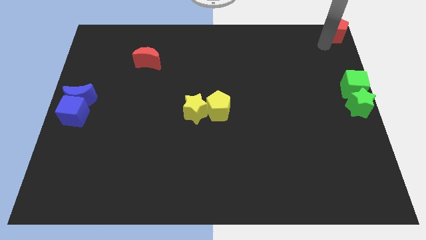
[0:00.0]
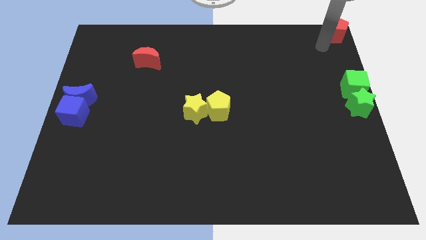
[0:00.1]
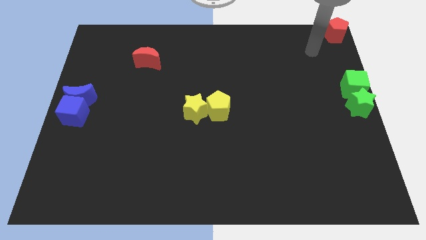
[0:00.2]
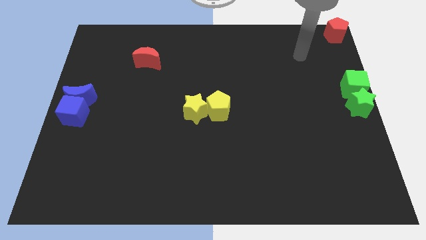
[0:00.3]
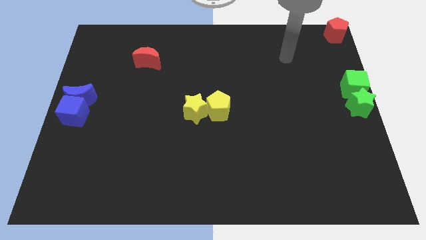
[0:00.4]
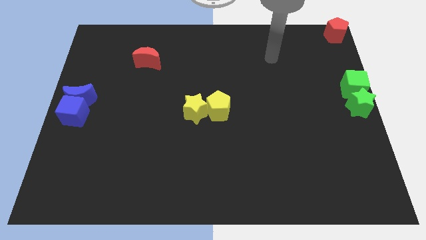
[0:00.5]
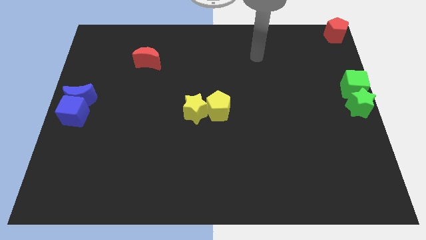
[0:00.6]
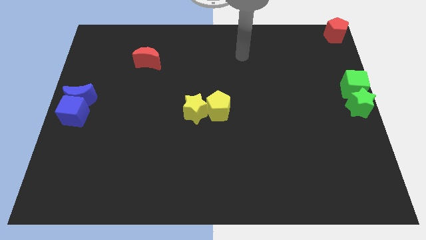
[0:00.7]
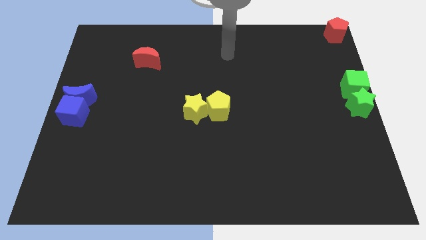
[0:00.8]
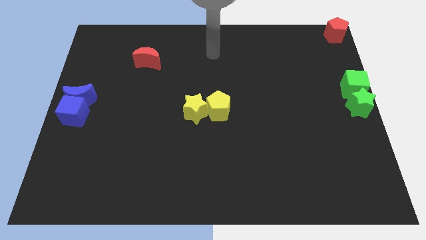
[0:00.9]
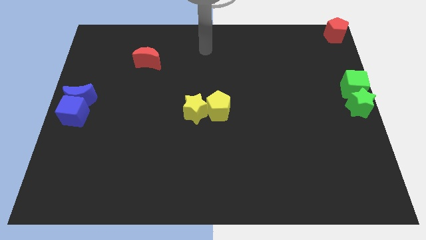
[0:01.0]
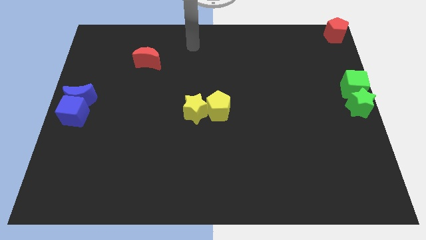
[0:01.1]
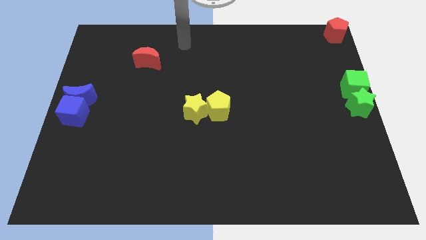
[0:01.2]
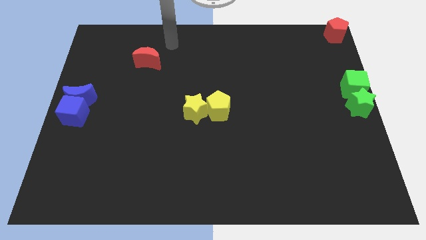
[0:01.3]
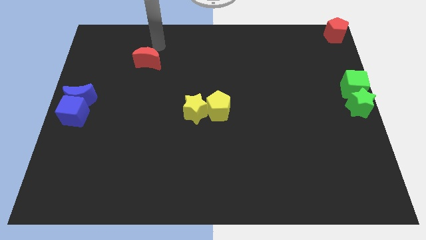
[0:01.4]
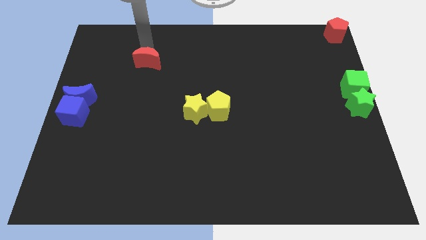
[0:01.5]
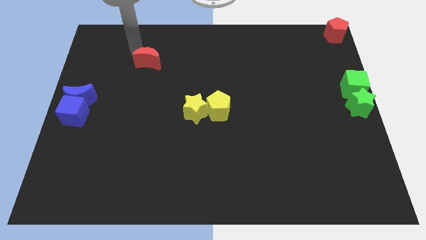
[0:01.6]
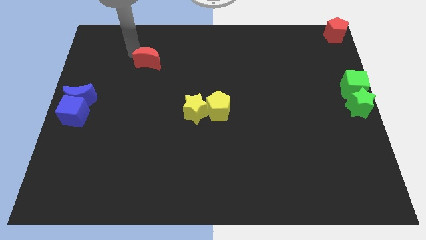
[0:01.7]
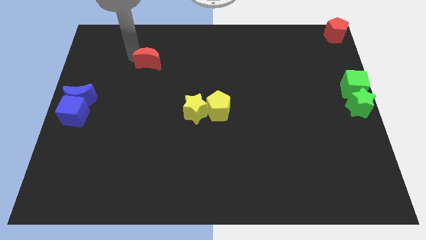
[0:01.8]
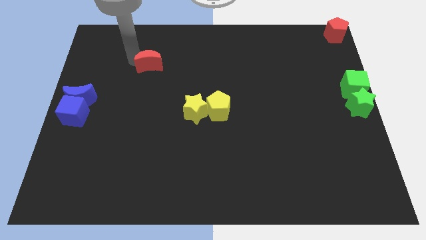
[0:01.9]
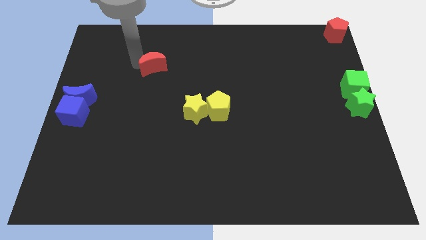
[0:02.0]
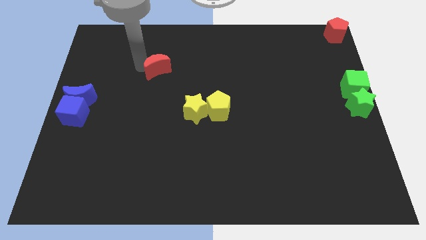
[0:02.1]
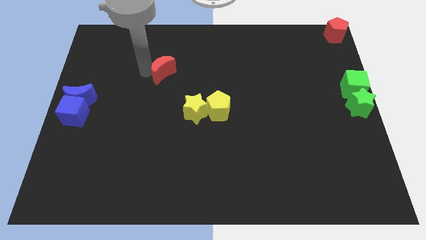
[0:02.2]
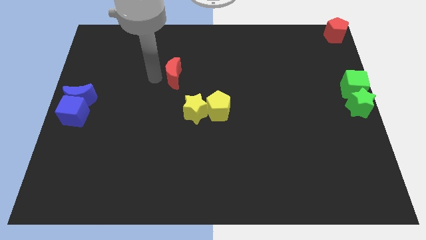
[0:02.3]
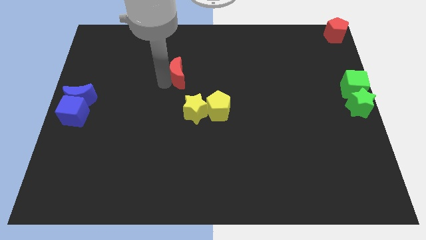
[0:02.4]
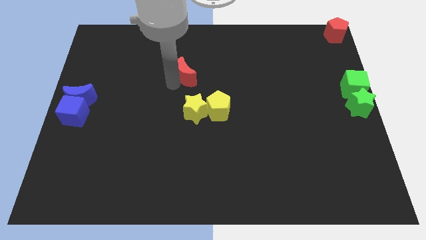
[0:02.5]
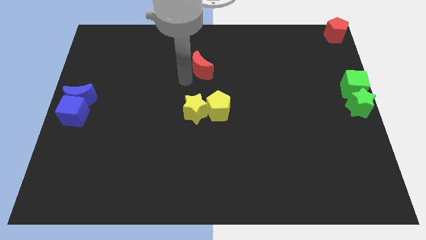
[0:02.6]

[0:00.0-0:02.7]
move the red crescent to the top of the yellow star

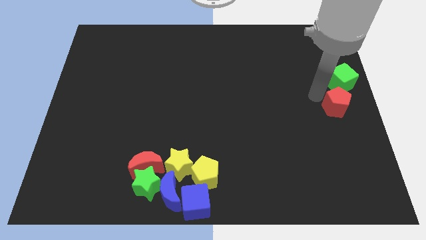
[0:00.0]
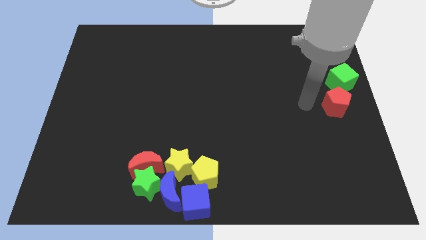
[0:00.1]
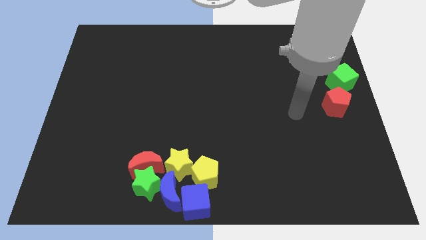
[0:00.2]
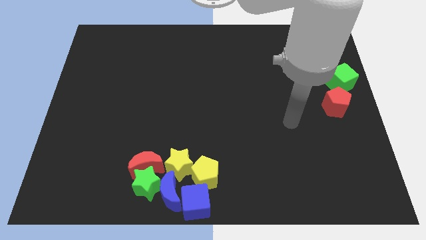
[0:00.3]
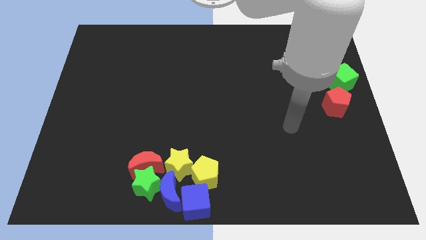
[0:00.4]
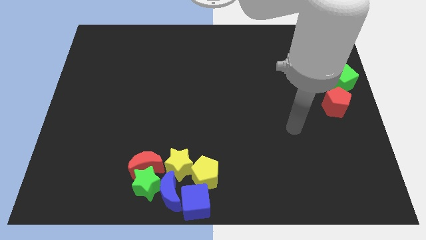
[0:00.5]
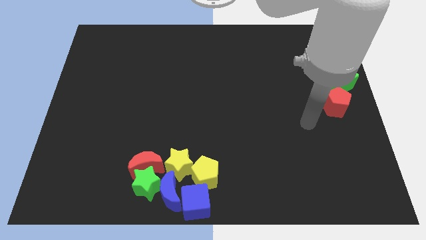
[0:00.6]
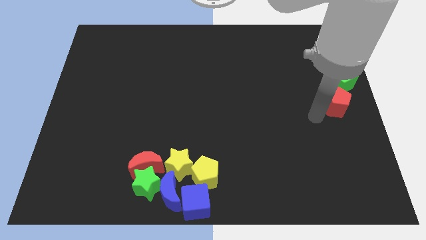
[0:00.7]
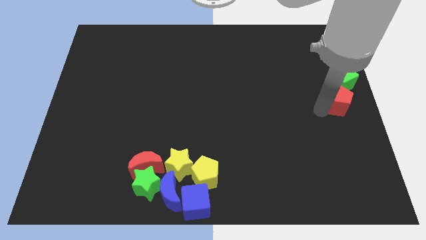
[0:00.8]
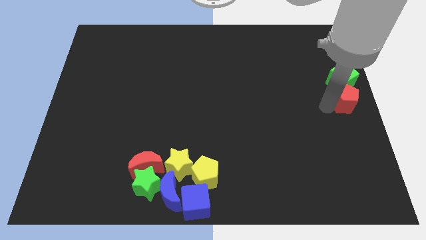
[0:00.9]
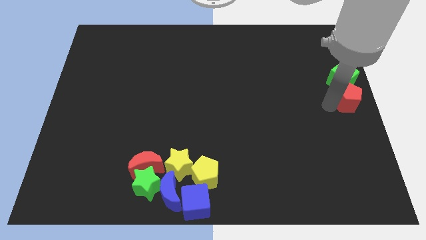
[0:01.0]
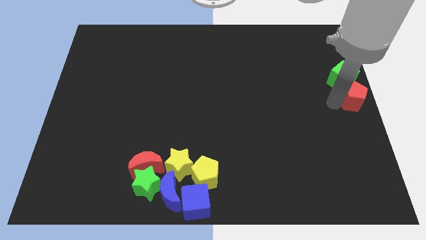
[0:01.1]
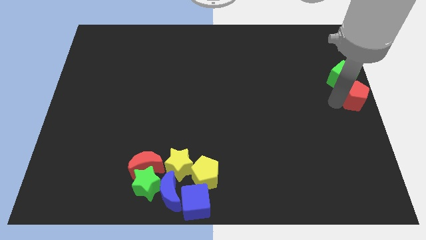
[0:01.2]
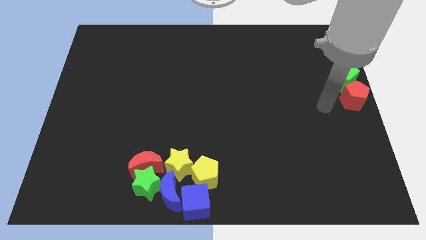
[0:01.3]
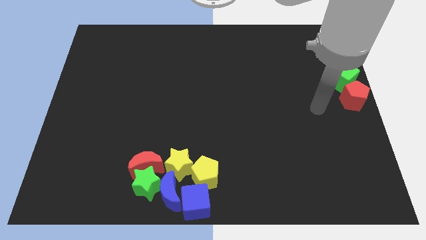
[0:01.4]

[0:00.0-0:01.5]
push the red pentagon to the bottom of the green cube

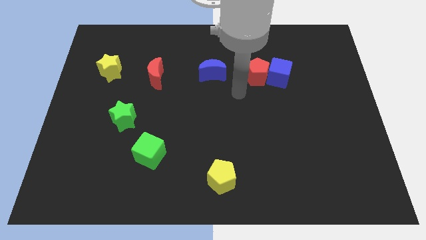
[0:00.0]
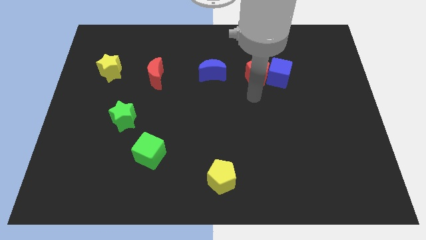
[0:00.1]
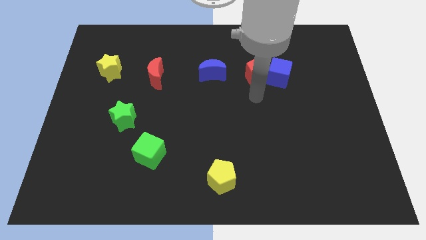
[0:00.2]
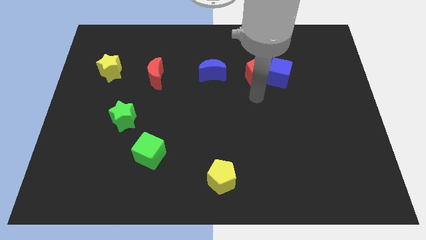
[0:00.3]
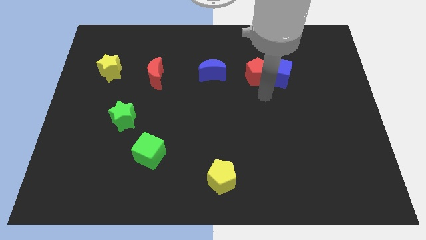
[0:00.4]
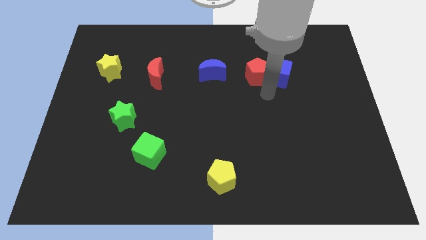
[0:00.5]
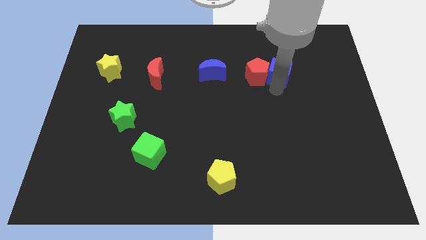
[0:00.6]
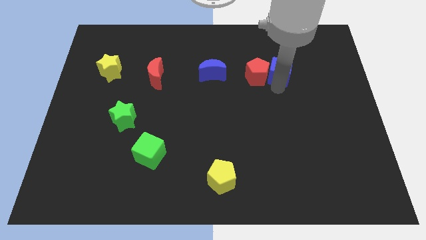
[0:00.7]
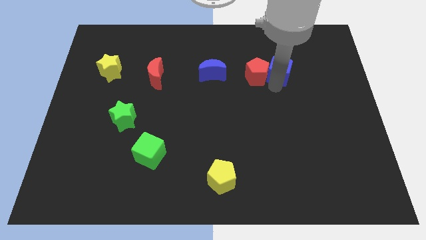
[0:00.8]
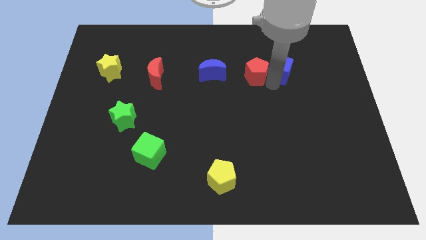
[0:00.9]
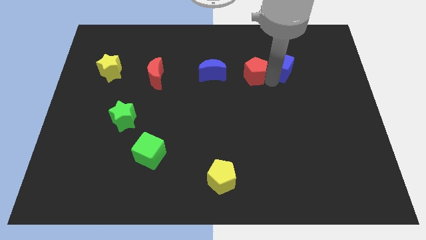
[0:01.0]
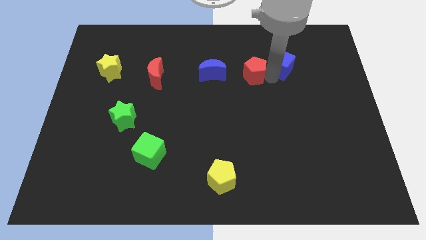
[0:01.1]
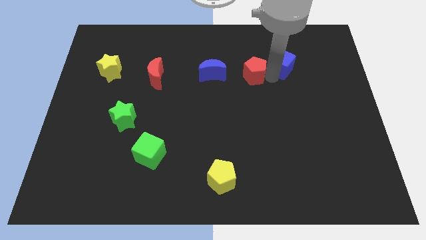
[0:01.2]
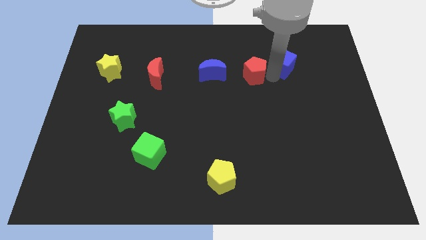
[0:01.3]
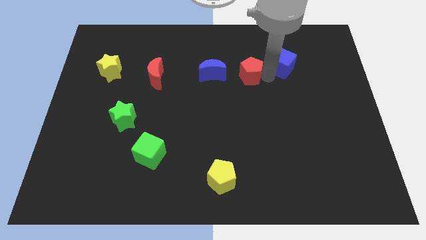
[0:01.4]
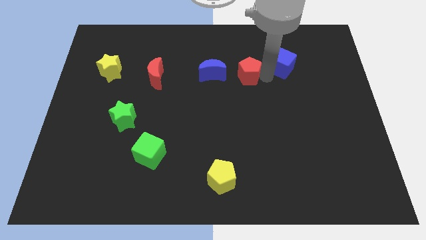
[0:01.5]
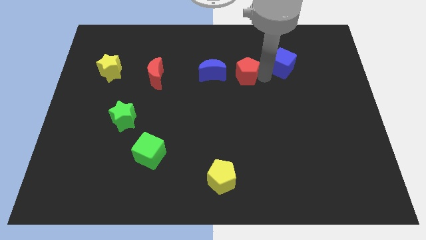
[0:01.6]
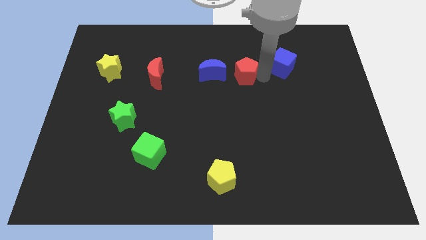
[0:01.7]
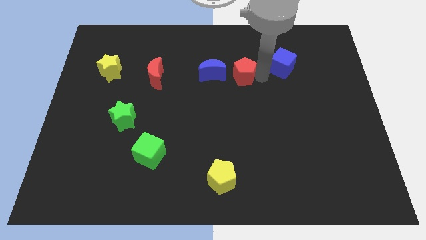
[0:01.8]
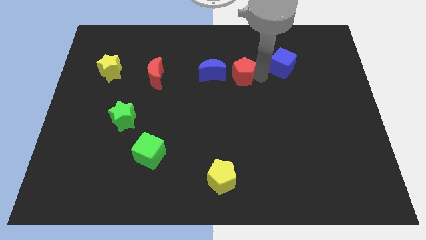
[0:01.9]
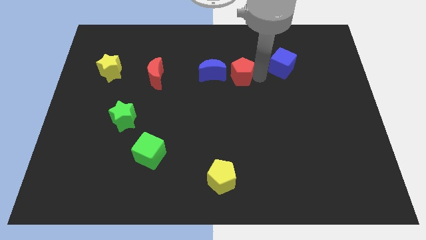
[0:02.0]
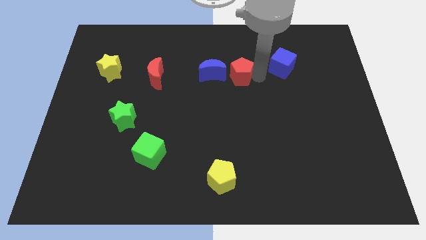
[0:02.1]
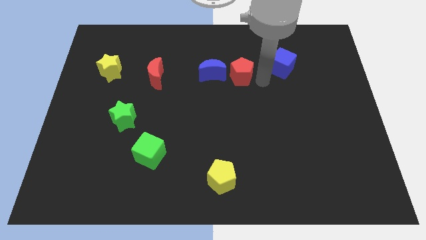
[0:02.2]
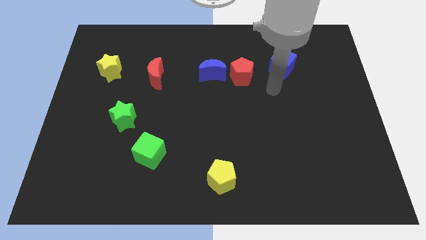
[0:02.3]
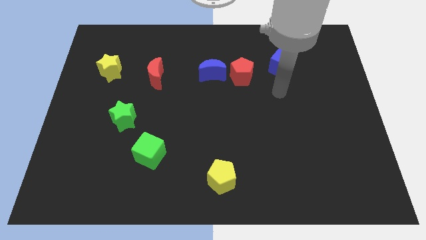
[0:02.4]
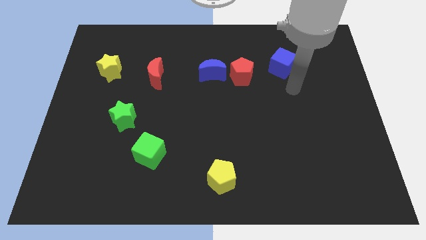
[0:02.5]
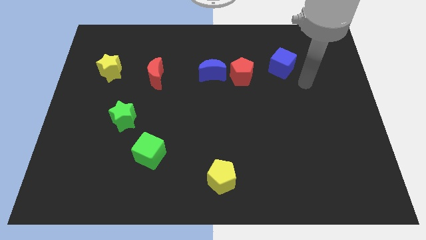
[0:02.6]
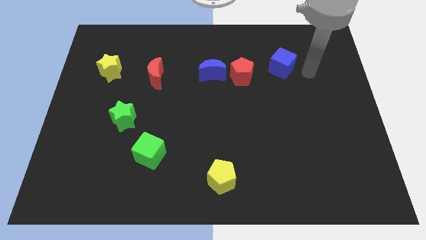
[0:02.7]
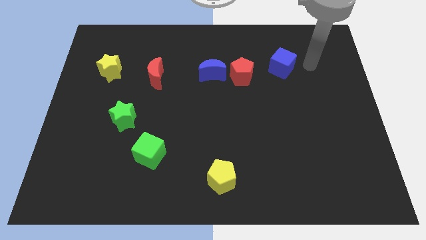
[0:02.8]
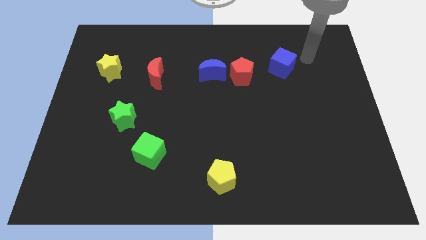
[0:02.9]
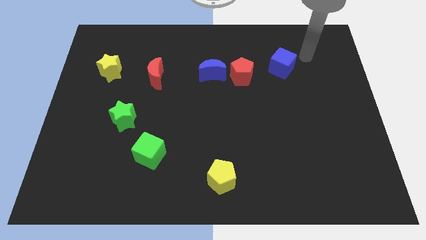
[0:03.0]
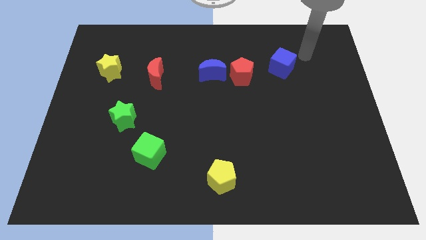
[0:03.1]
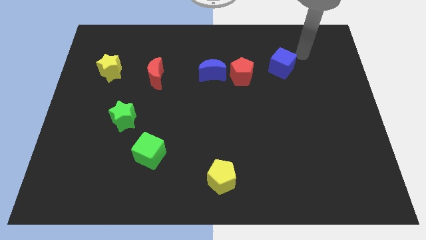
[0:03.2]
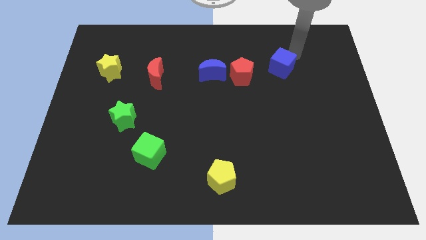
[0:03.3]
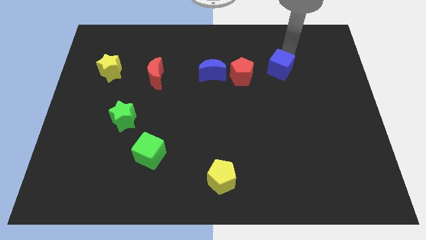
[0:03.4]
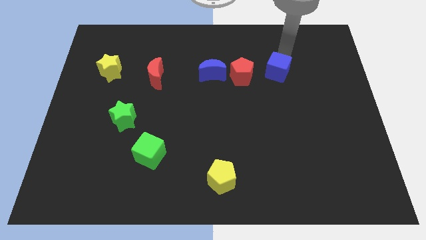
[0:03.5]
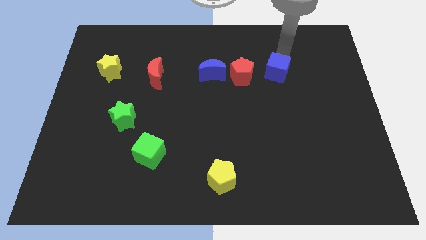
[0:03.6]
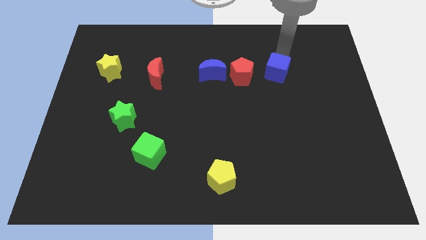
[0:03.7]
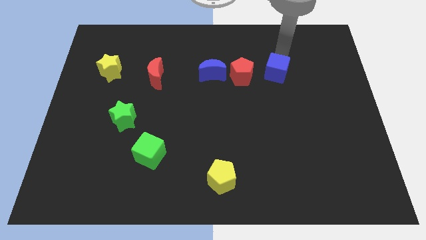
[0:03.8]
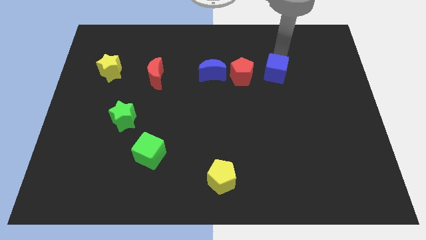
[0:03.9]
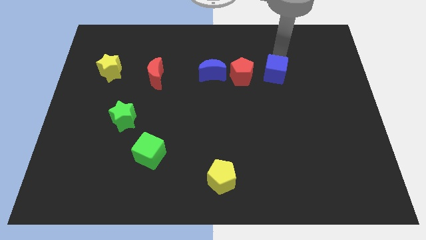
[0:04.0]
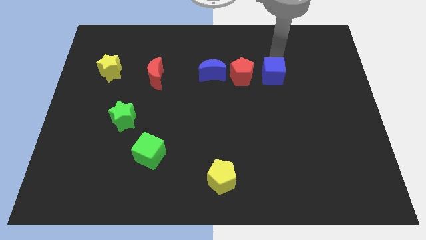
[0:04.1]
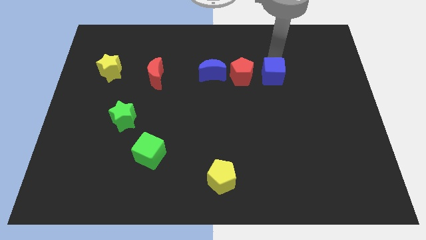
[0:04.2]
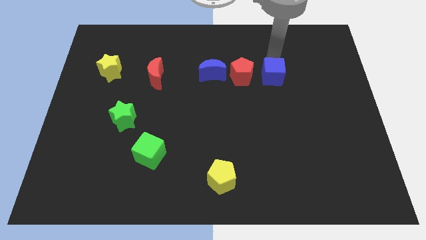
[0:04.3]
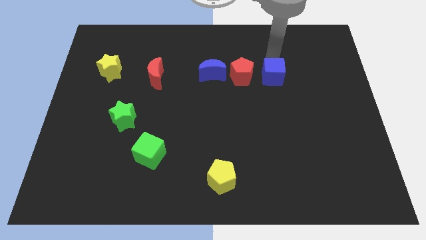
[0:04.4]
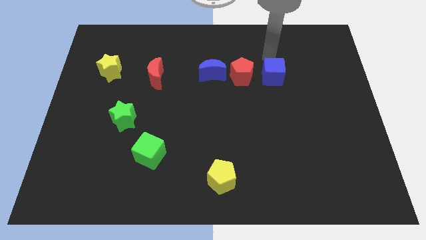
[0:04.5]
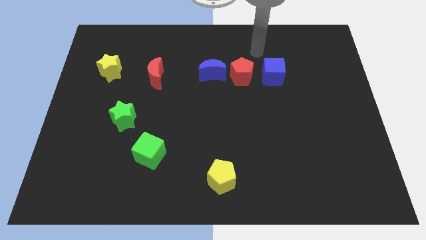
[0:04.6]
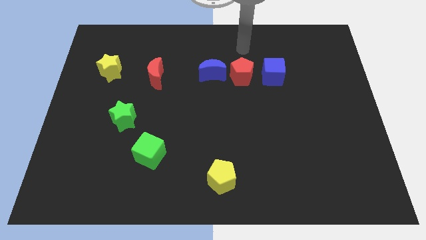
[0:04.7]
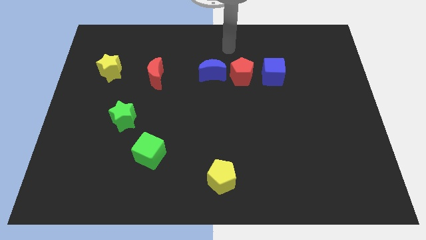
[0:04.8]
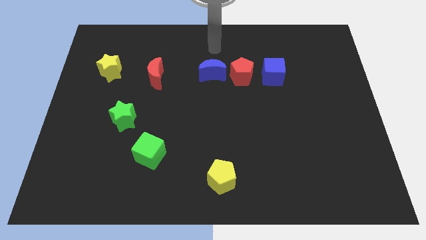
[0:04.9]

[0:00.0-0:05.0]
adjust the red pentagon and the blue cube to form a horizontal line with red crescent and yellow star
